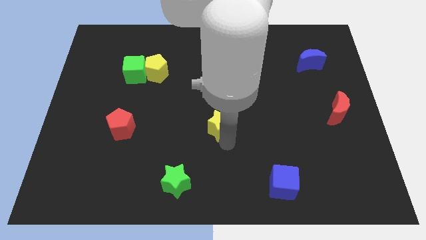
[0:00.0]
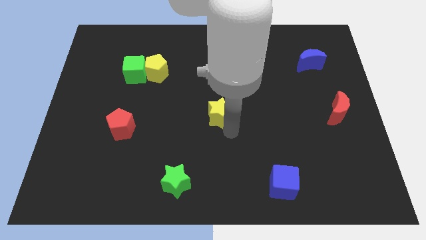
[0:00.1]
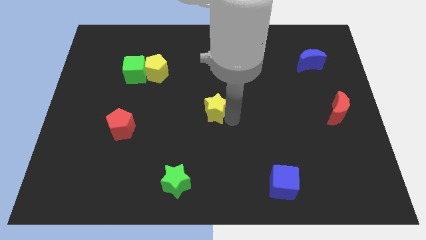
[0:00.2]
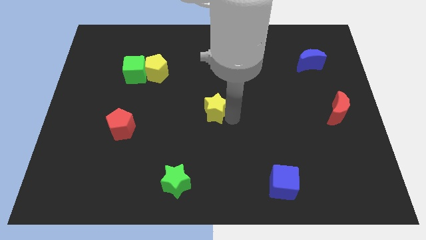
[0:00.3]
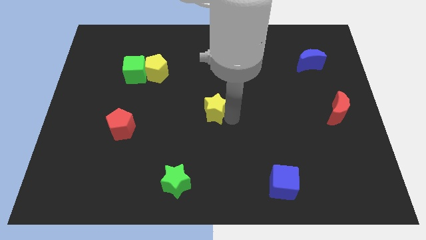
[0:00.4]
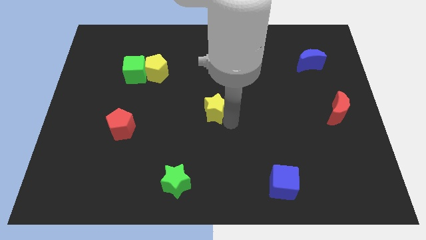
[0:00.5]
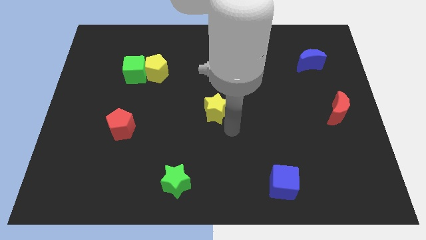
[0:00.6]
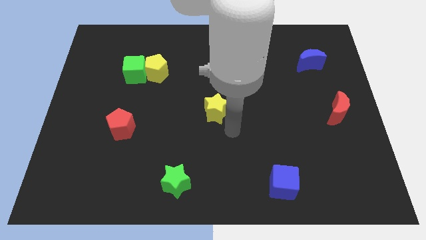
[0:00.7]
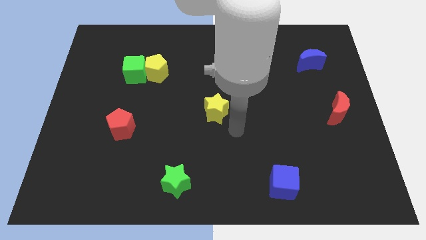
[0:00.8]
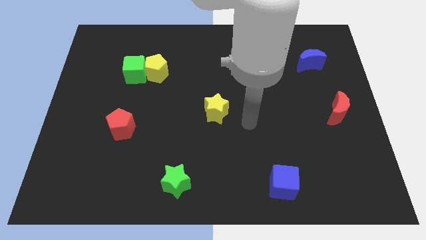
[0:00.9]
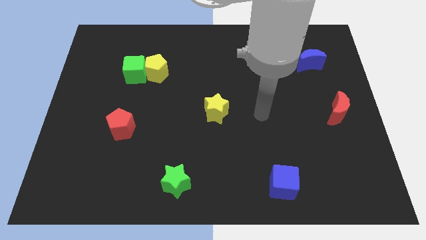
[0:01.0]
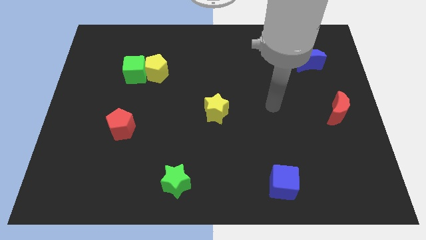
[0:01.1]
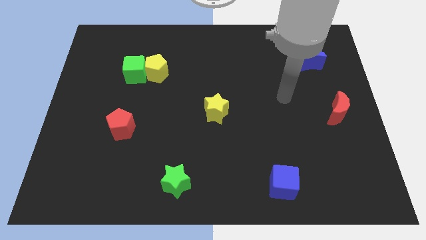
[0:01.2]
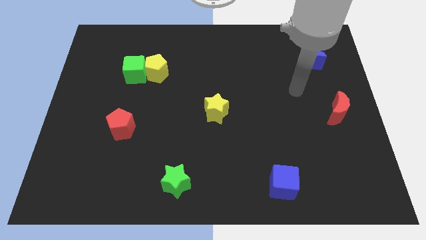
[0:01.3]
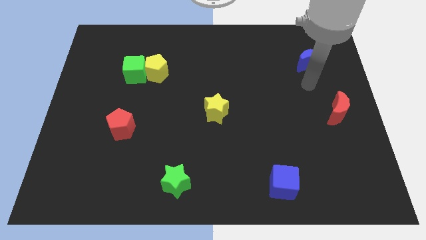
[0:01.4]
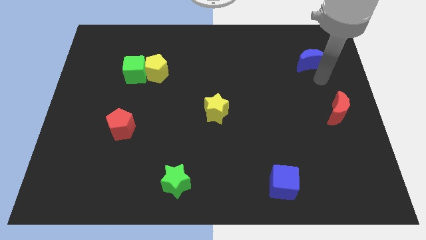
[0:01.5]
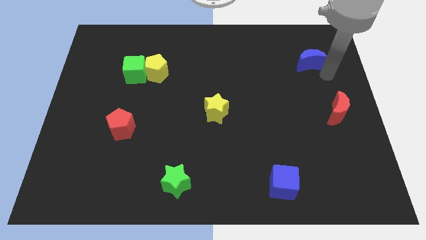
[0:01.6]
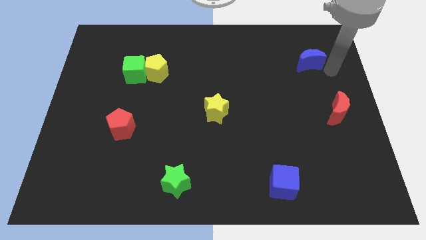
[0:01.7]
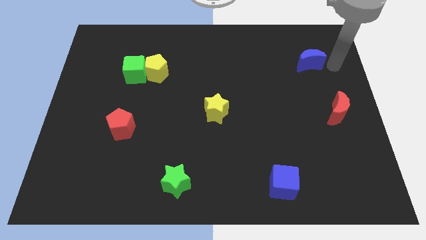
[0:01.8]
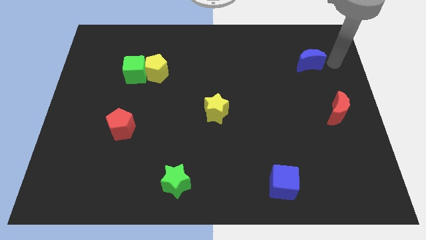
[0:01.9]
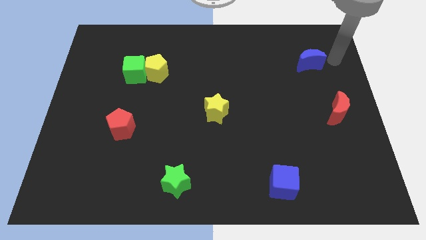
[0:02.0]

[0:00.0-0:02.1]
move your arm near to the blue moon

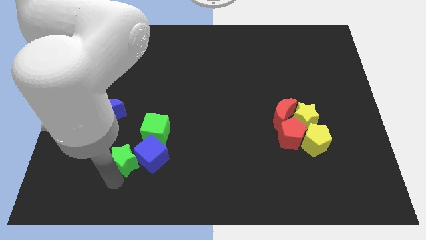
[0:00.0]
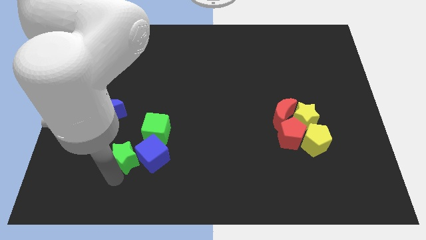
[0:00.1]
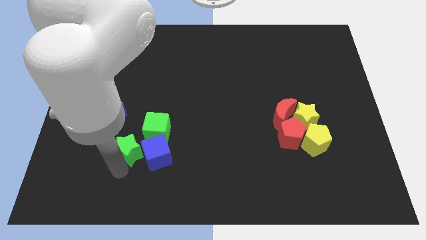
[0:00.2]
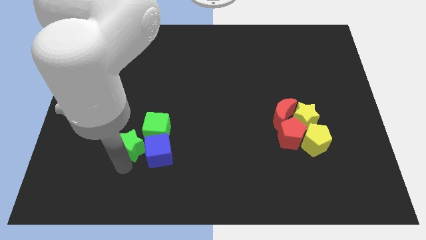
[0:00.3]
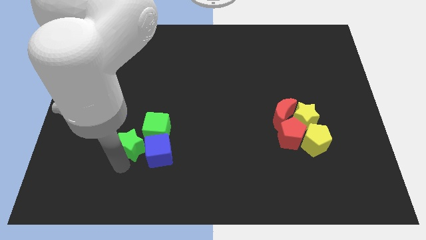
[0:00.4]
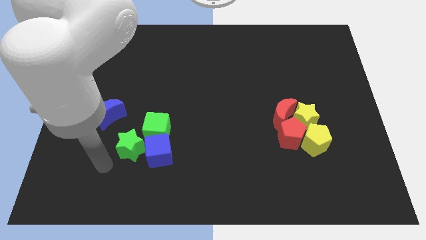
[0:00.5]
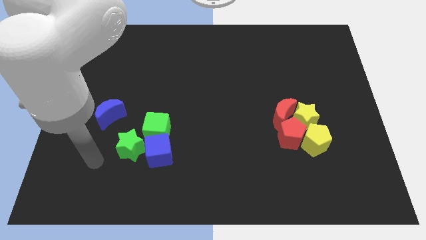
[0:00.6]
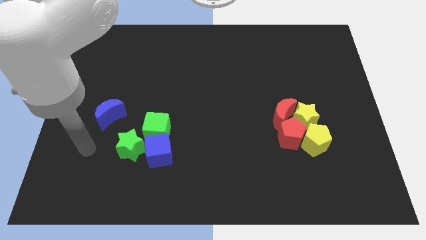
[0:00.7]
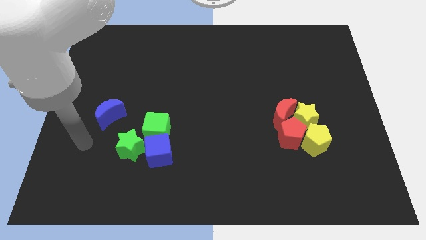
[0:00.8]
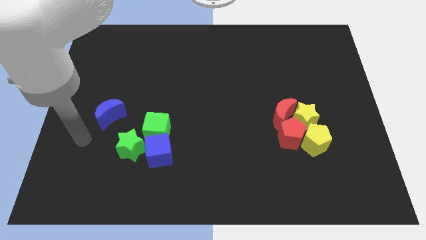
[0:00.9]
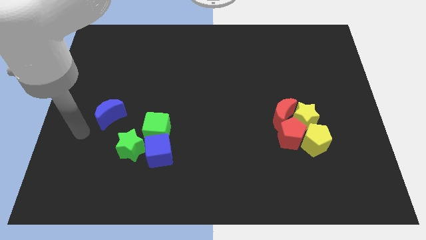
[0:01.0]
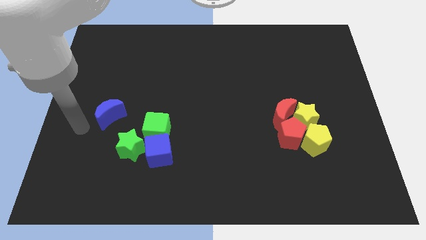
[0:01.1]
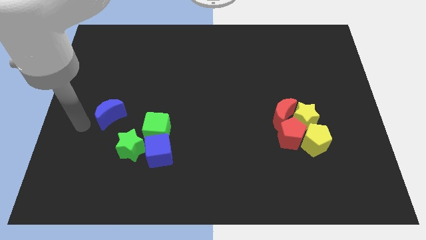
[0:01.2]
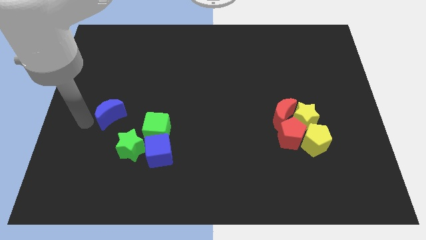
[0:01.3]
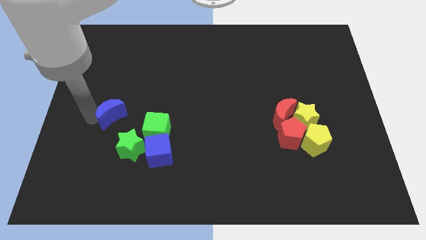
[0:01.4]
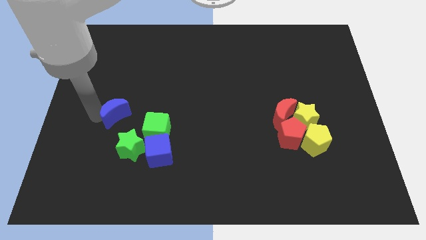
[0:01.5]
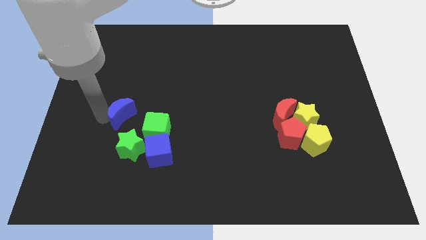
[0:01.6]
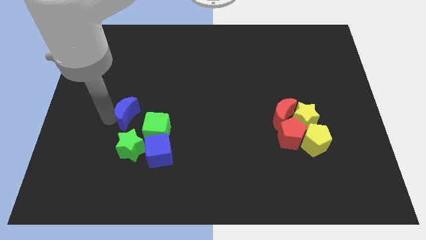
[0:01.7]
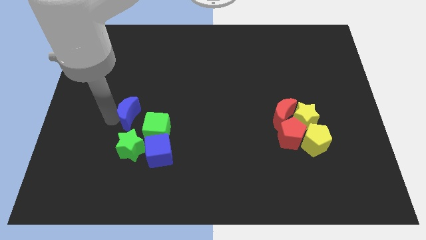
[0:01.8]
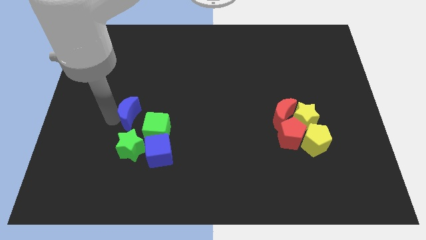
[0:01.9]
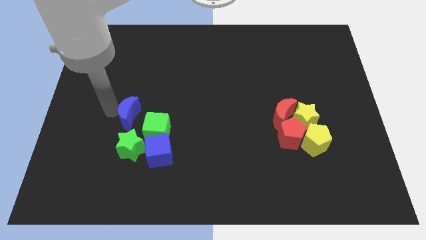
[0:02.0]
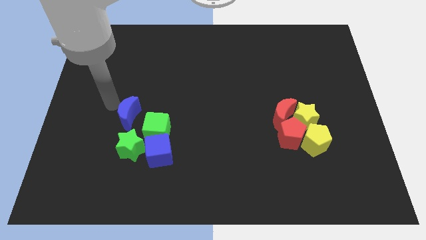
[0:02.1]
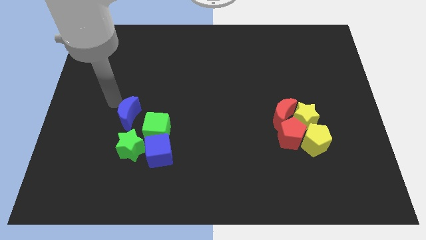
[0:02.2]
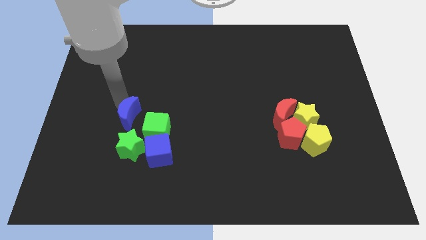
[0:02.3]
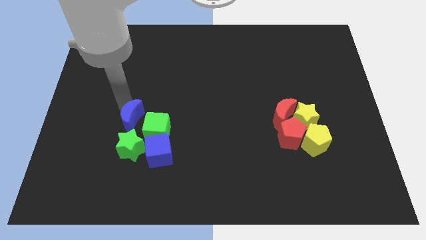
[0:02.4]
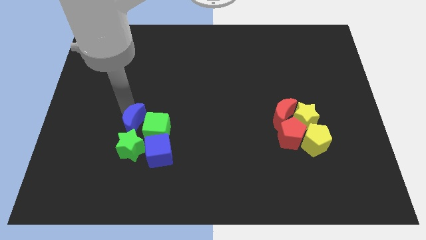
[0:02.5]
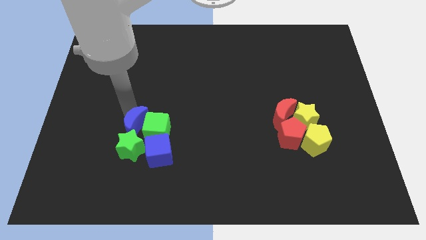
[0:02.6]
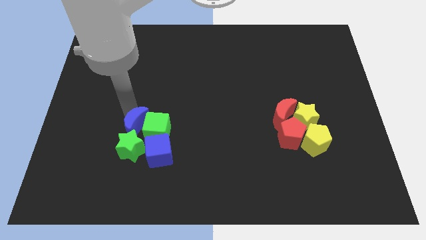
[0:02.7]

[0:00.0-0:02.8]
place the blue moon to the left of the green cube

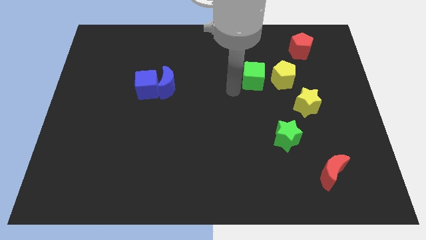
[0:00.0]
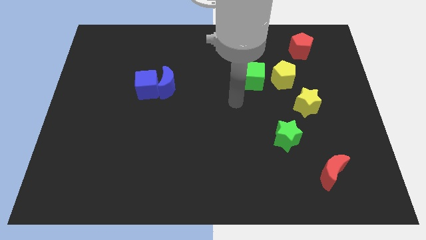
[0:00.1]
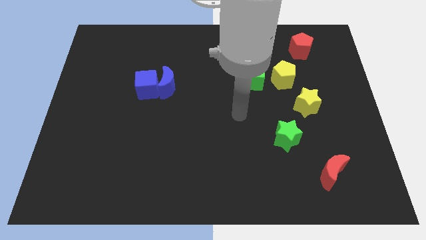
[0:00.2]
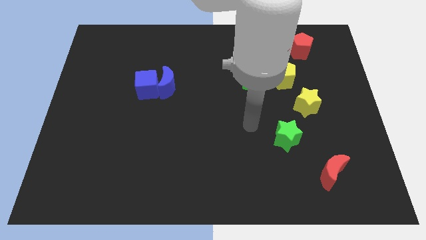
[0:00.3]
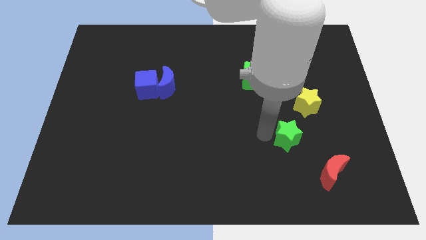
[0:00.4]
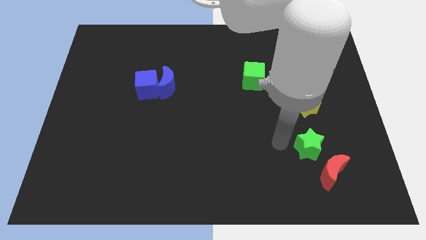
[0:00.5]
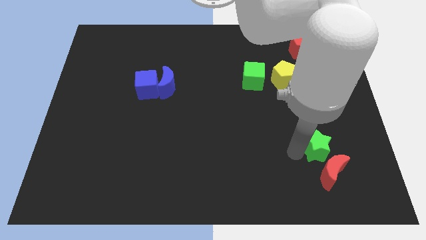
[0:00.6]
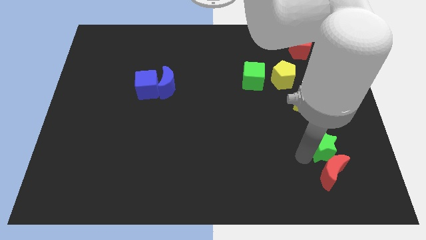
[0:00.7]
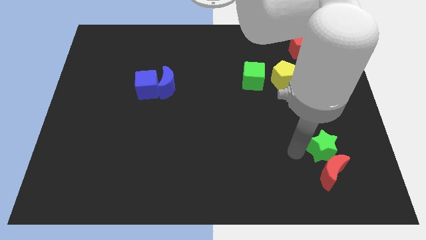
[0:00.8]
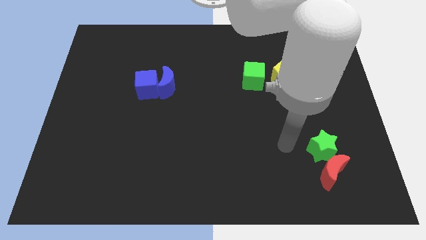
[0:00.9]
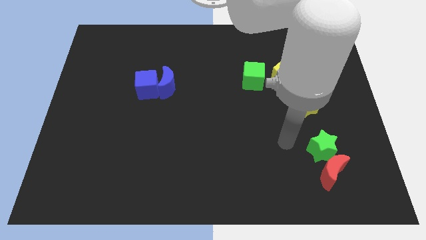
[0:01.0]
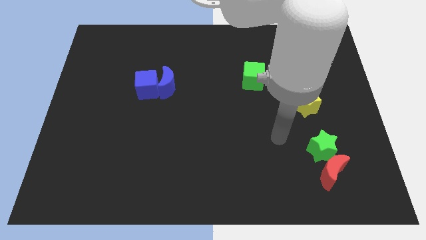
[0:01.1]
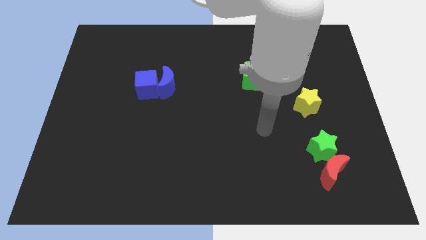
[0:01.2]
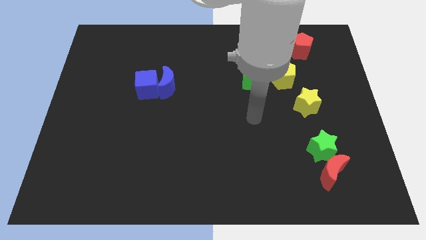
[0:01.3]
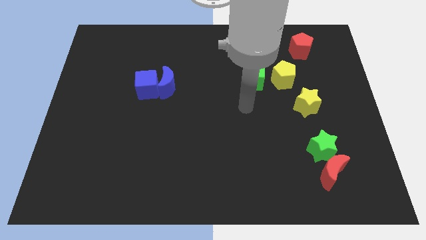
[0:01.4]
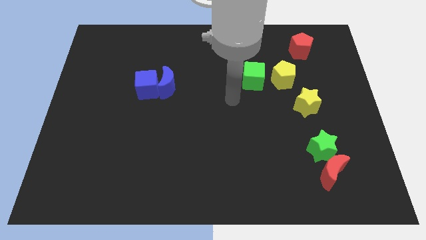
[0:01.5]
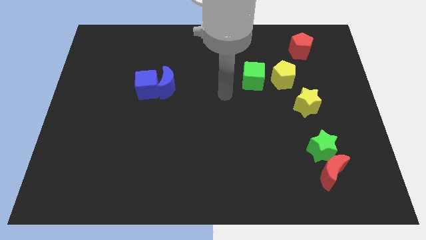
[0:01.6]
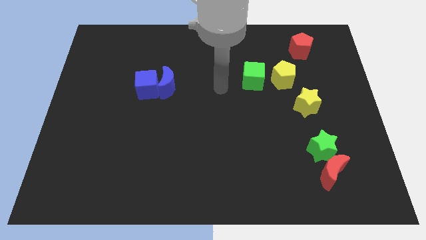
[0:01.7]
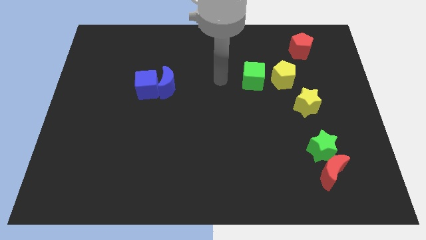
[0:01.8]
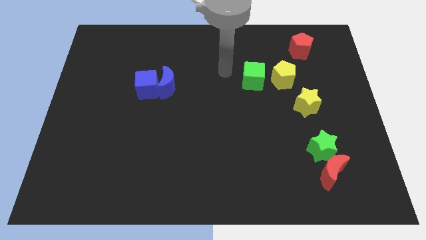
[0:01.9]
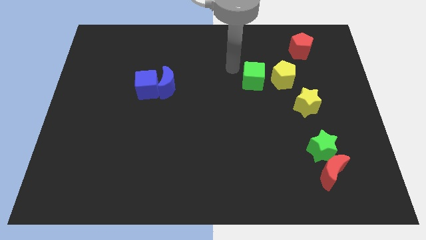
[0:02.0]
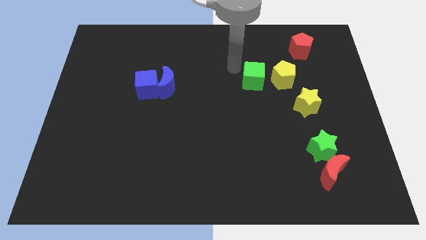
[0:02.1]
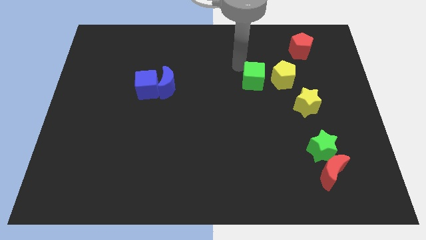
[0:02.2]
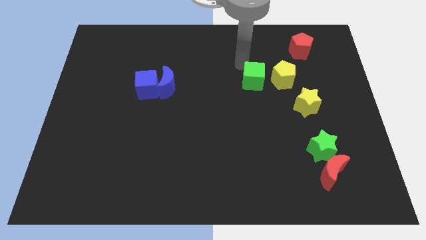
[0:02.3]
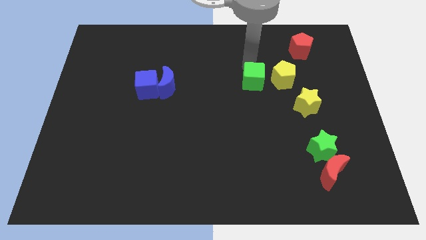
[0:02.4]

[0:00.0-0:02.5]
push the green star to the top of the red crescent

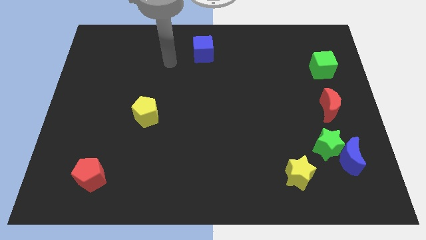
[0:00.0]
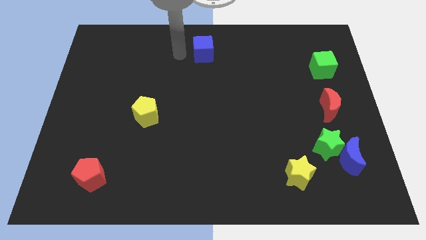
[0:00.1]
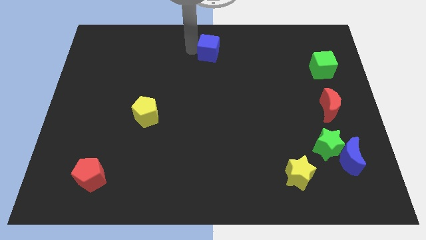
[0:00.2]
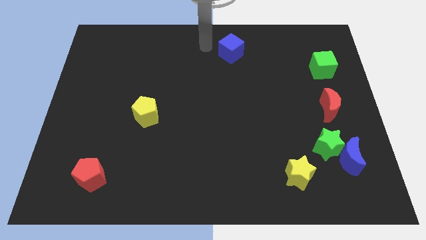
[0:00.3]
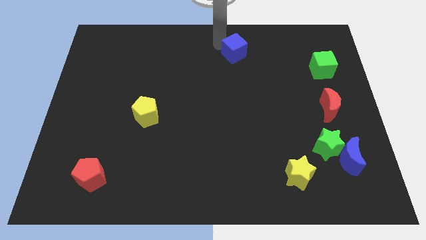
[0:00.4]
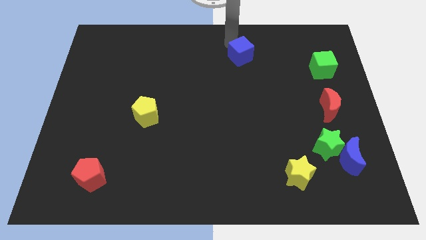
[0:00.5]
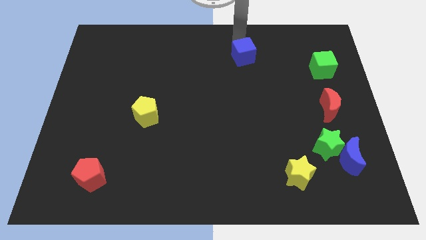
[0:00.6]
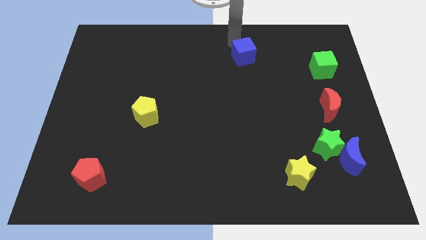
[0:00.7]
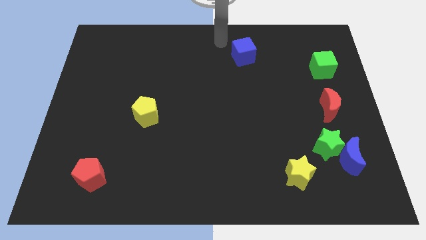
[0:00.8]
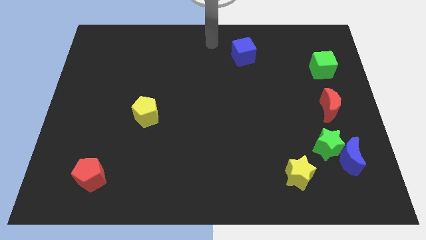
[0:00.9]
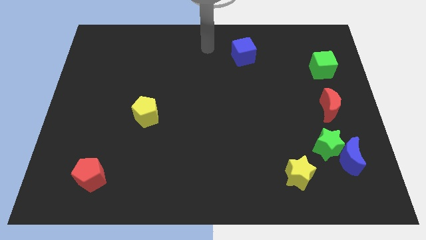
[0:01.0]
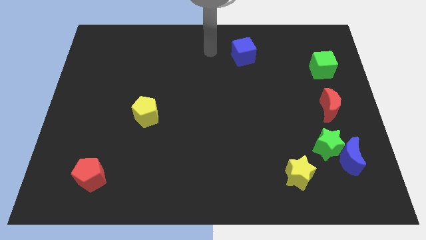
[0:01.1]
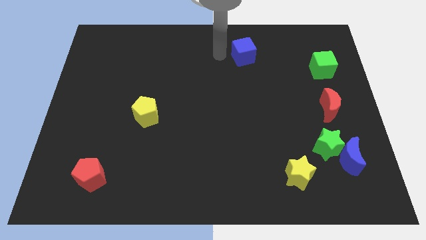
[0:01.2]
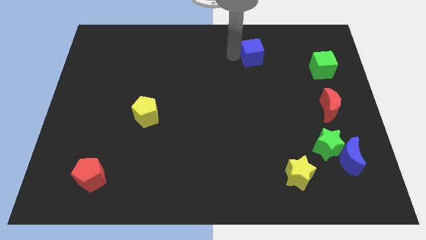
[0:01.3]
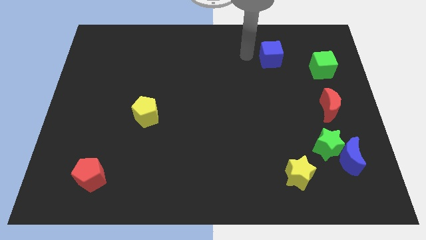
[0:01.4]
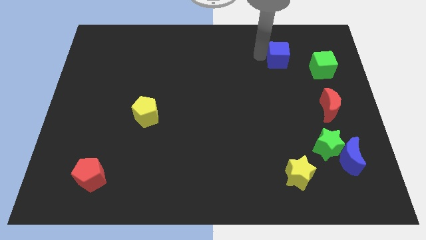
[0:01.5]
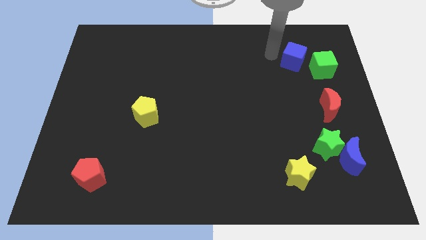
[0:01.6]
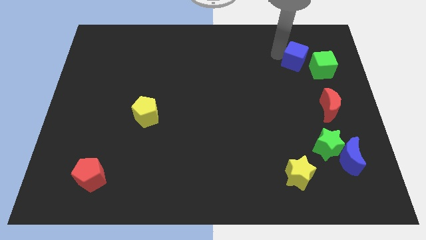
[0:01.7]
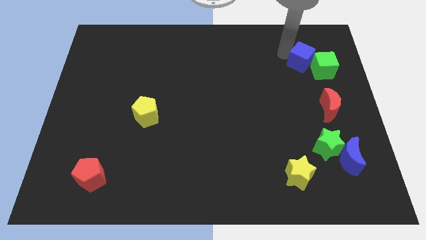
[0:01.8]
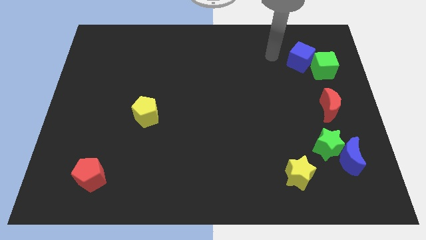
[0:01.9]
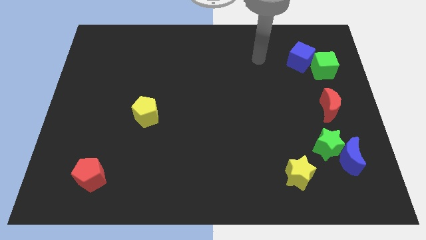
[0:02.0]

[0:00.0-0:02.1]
move the blue cube into the green cube
